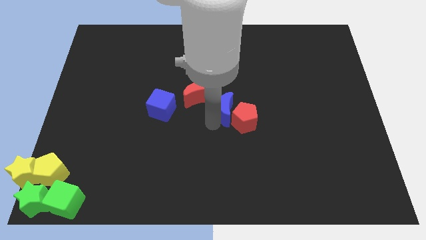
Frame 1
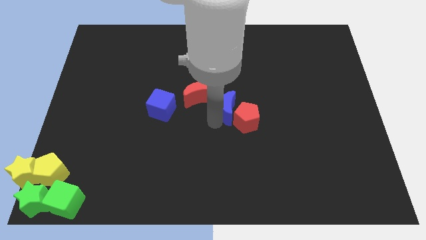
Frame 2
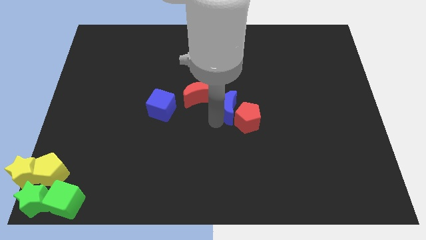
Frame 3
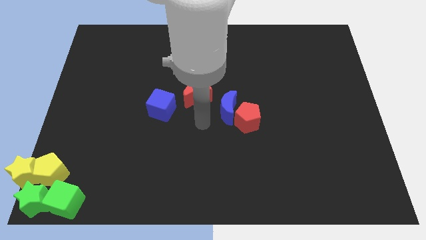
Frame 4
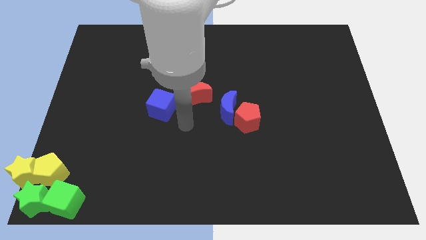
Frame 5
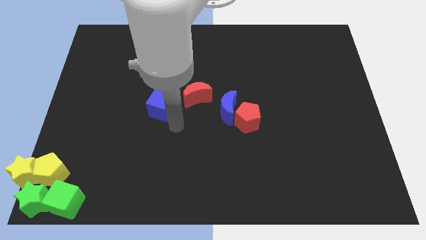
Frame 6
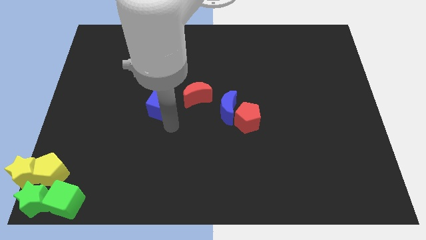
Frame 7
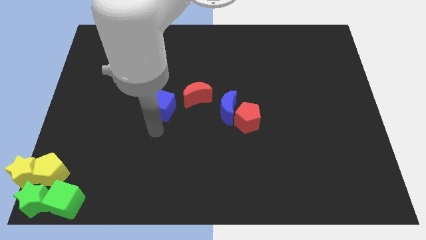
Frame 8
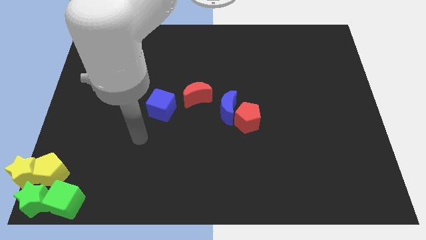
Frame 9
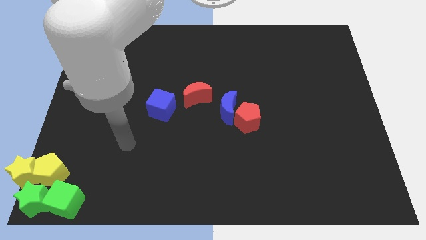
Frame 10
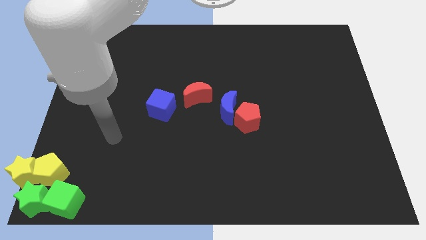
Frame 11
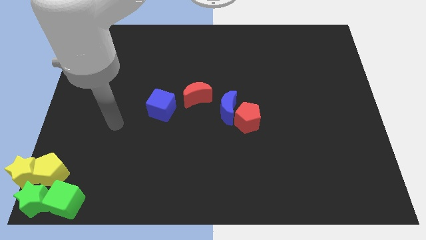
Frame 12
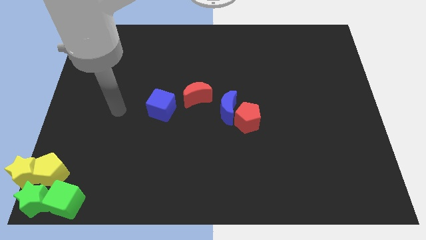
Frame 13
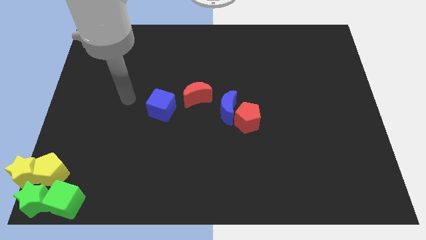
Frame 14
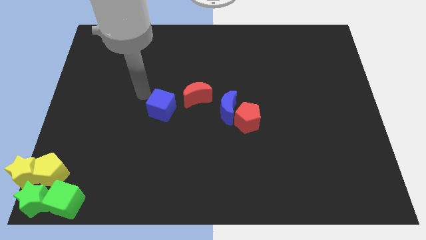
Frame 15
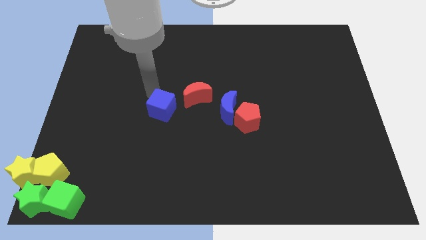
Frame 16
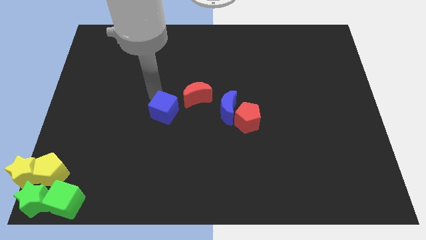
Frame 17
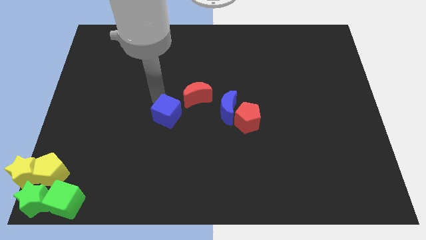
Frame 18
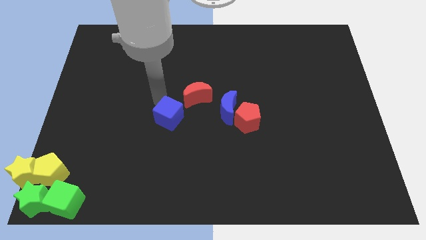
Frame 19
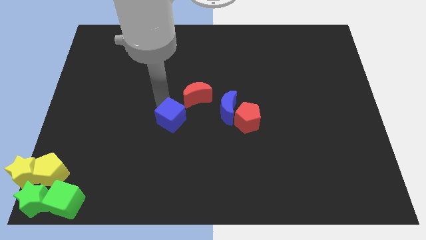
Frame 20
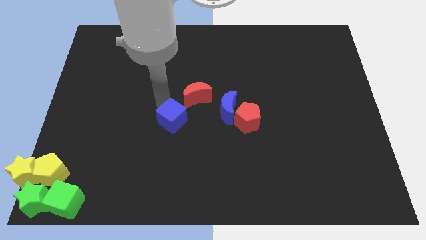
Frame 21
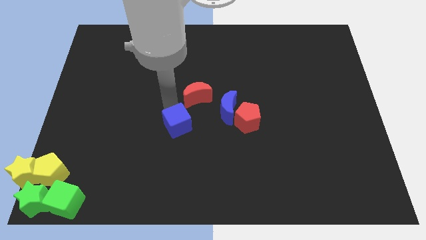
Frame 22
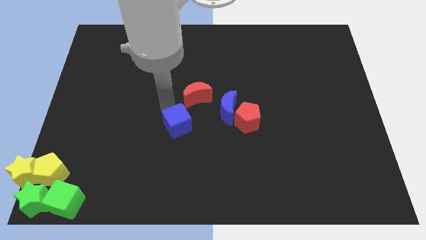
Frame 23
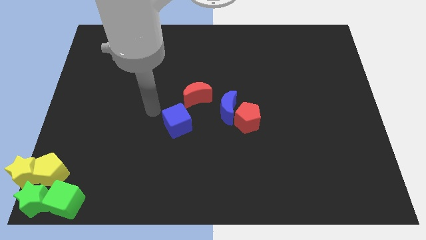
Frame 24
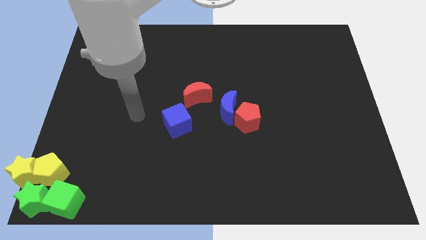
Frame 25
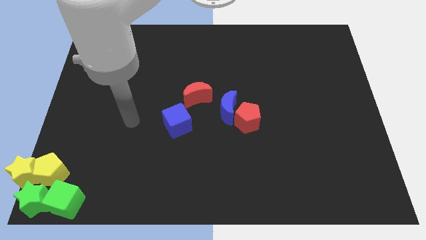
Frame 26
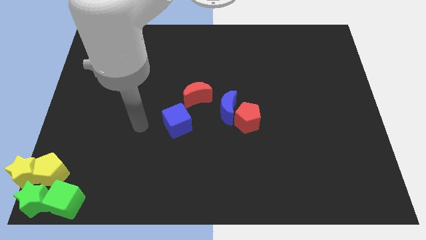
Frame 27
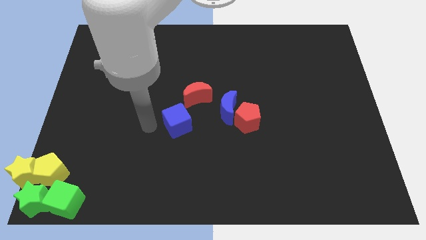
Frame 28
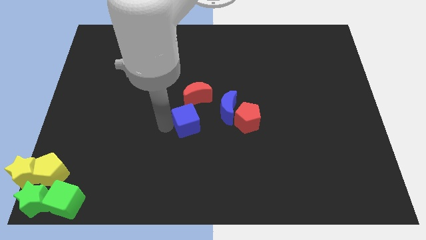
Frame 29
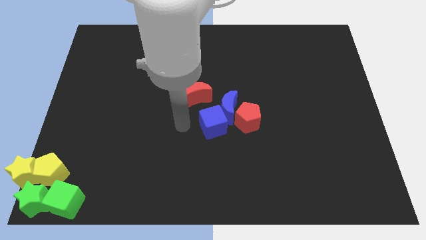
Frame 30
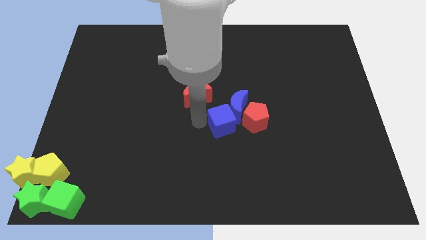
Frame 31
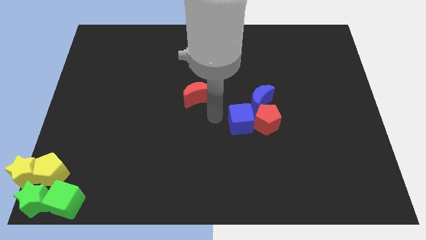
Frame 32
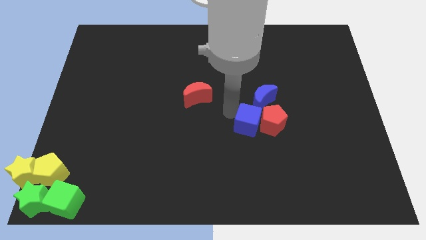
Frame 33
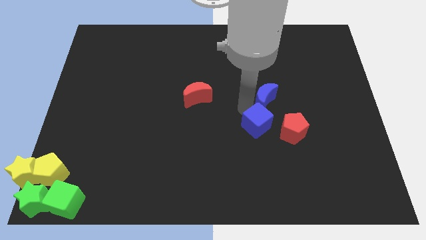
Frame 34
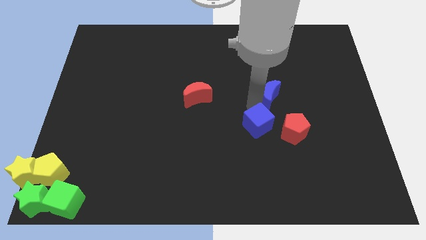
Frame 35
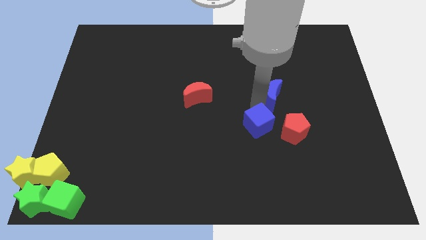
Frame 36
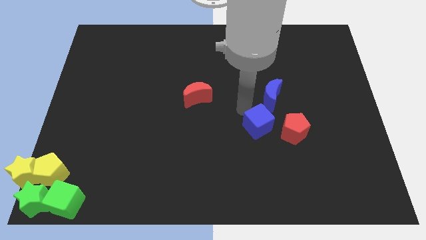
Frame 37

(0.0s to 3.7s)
move the blue cube into red pentagon

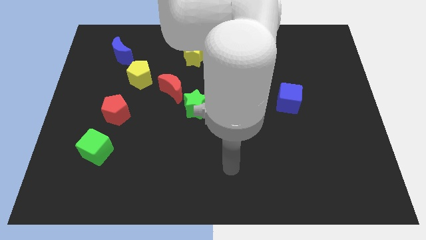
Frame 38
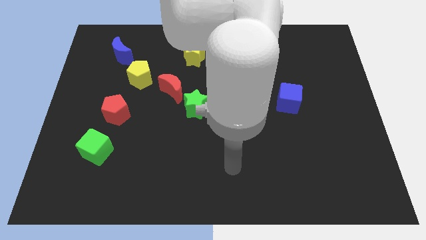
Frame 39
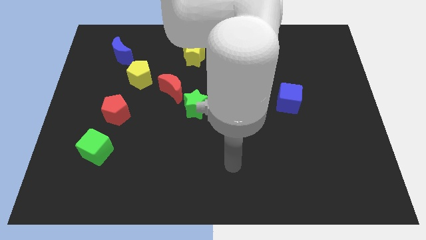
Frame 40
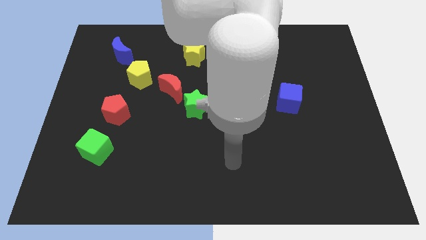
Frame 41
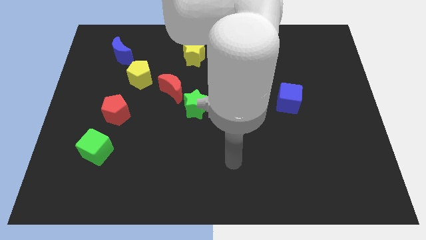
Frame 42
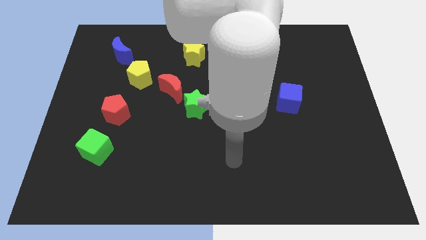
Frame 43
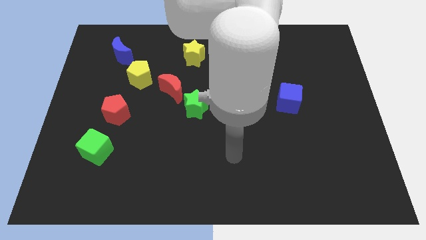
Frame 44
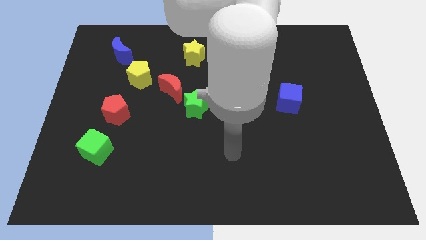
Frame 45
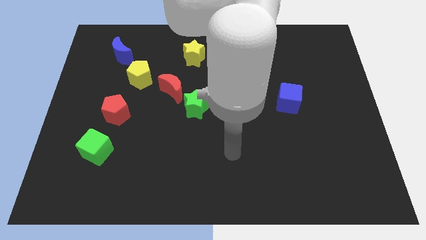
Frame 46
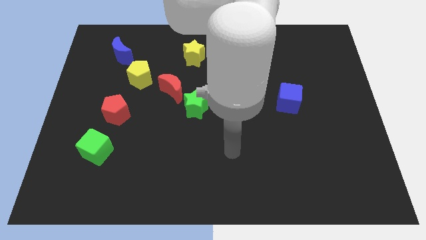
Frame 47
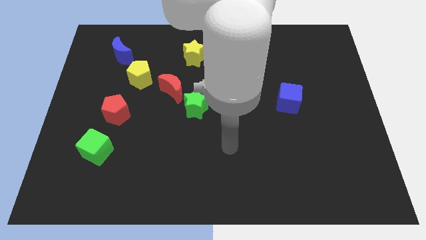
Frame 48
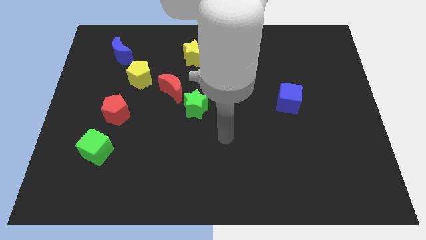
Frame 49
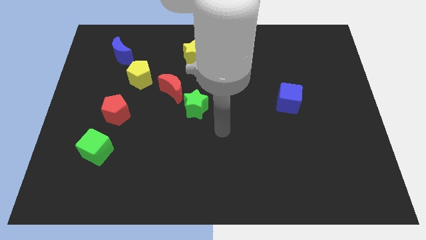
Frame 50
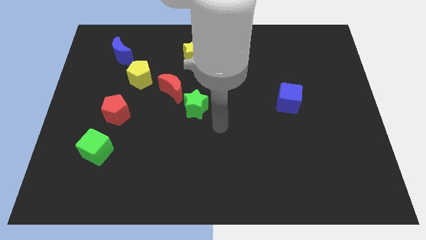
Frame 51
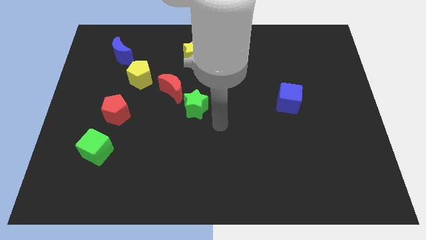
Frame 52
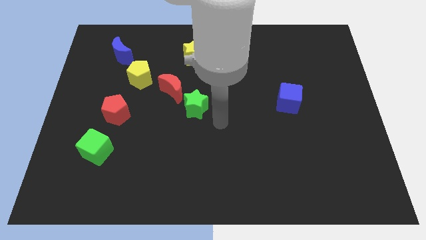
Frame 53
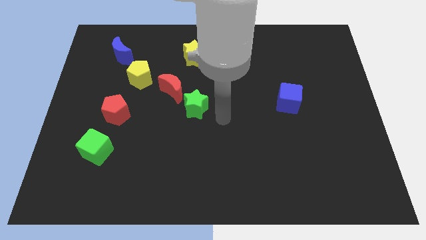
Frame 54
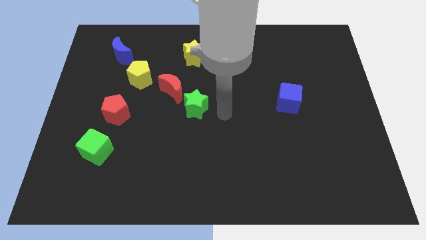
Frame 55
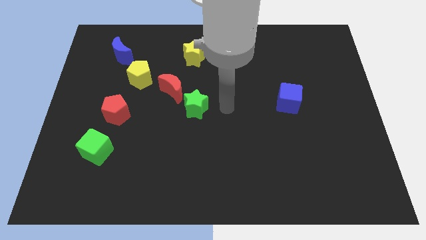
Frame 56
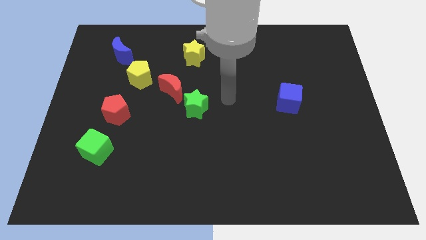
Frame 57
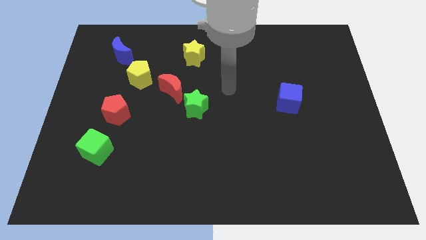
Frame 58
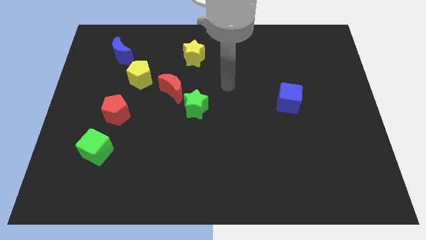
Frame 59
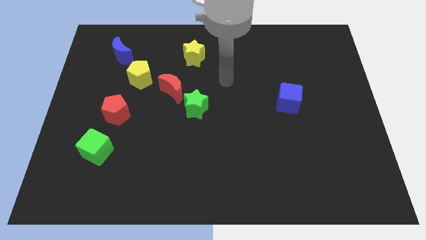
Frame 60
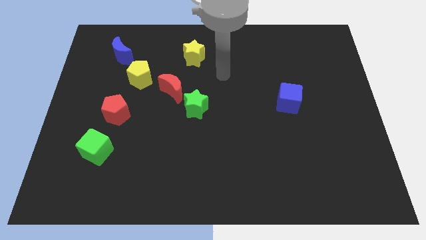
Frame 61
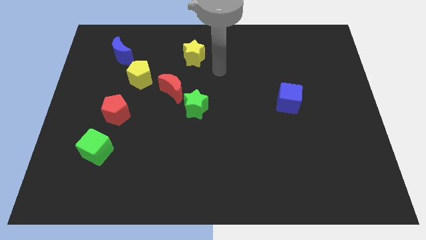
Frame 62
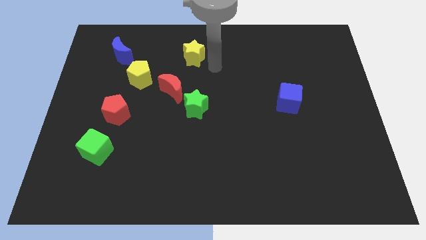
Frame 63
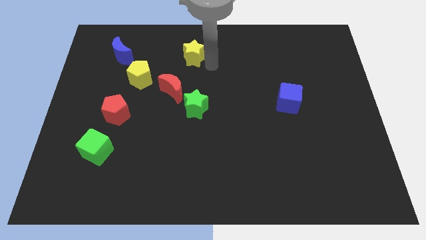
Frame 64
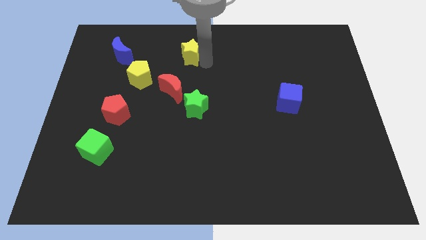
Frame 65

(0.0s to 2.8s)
touch the yellow star

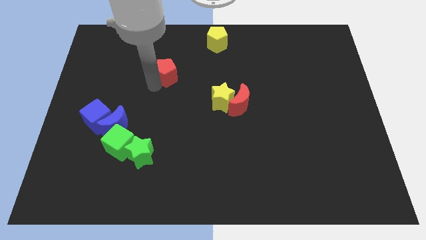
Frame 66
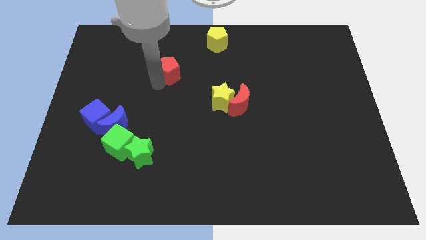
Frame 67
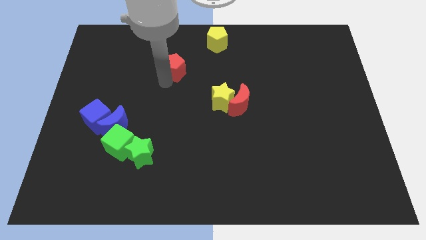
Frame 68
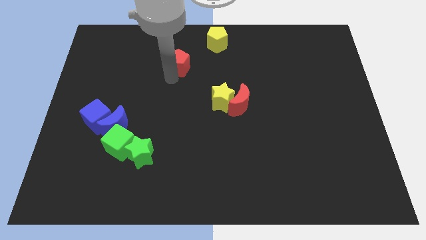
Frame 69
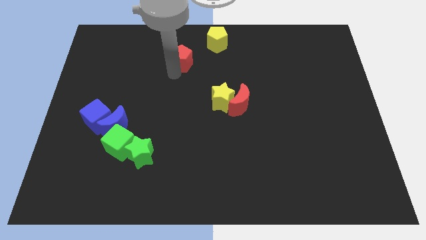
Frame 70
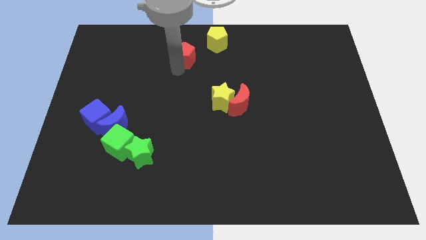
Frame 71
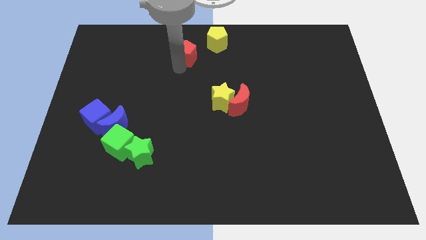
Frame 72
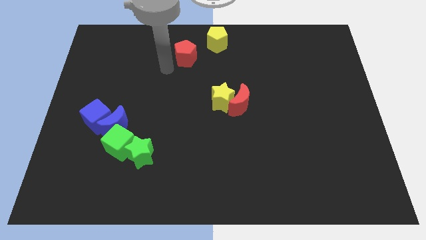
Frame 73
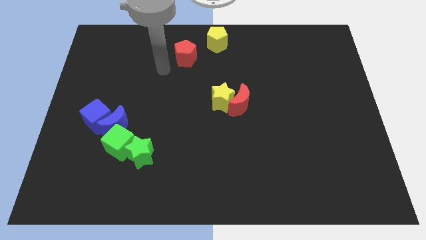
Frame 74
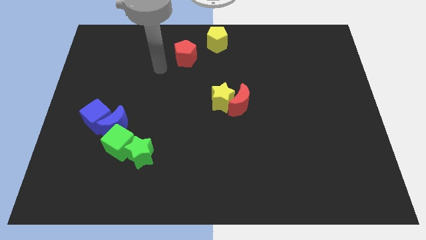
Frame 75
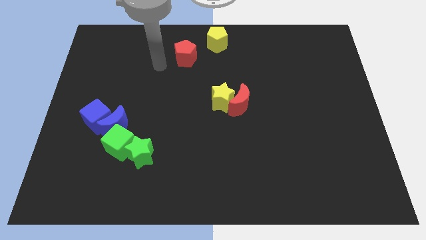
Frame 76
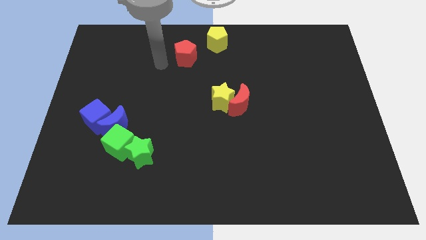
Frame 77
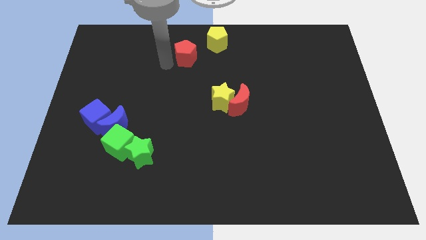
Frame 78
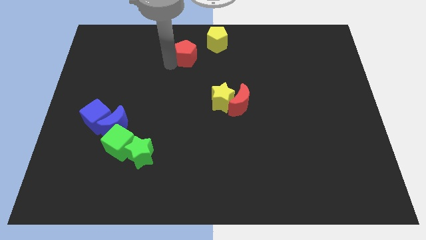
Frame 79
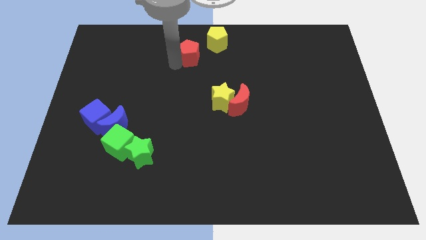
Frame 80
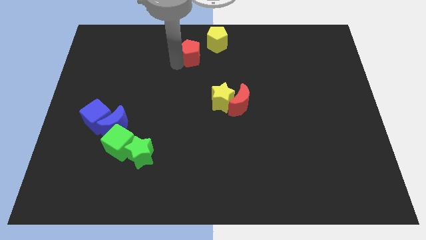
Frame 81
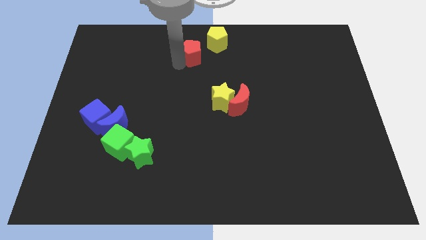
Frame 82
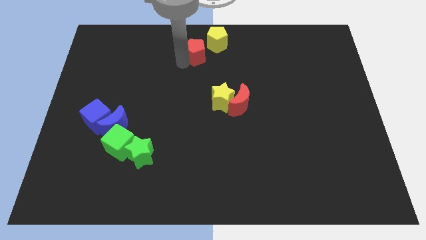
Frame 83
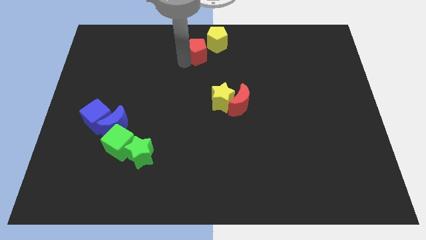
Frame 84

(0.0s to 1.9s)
push the red pentagon to the diagonal bottom left of the yellow pentagon

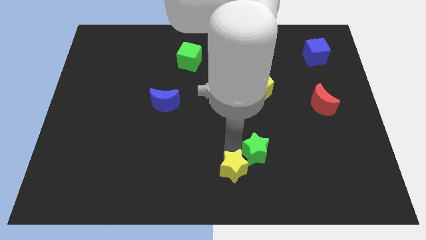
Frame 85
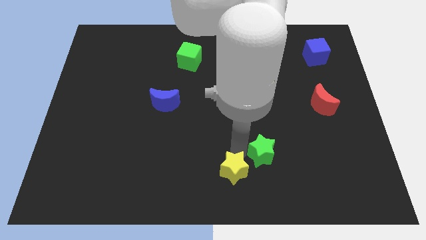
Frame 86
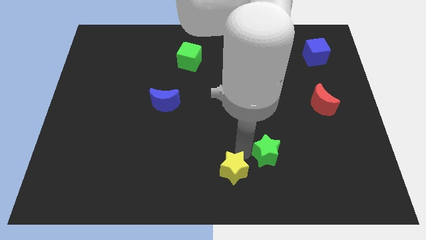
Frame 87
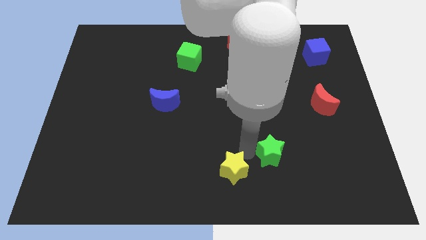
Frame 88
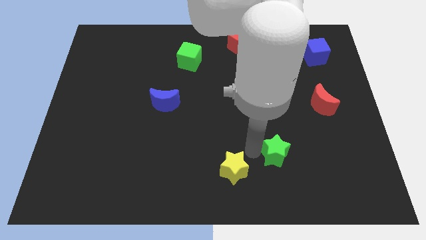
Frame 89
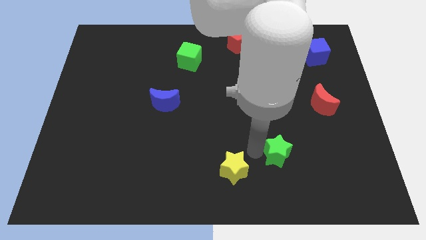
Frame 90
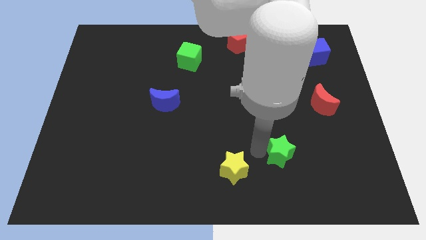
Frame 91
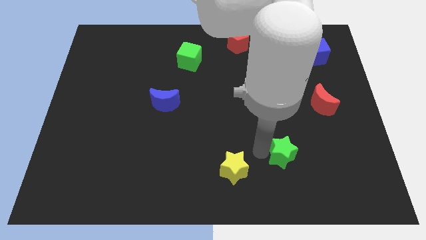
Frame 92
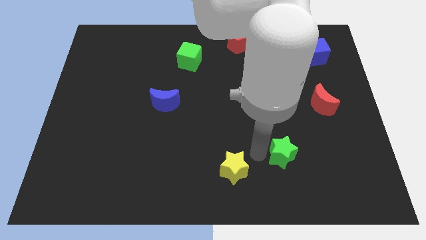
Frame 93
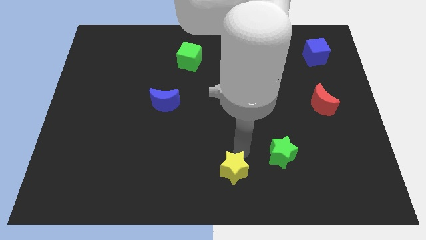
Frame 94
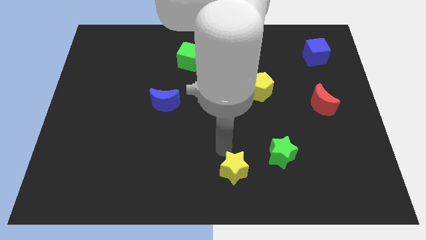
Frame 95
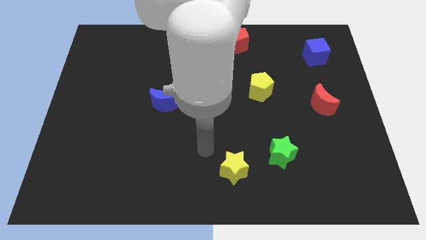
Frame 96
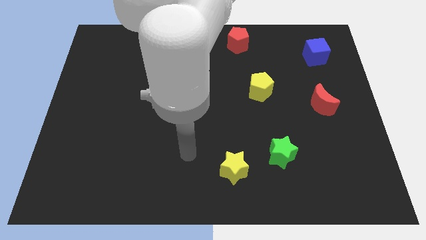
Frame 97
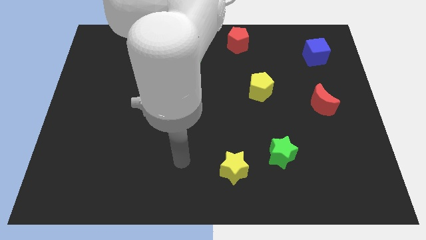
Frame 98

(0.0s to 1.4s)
separate the green star from the yellow star
